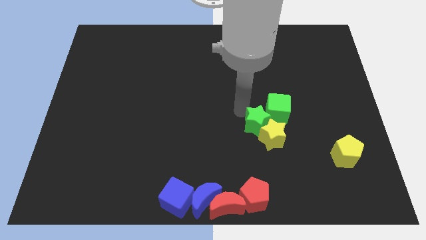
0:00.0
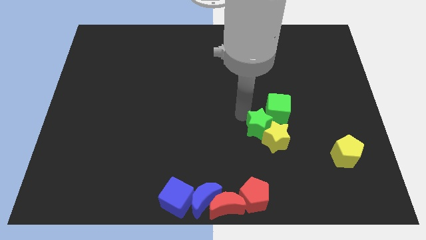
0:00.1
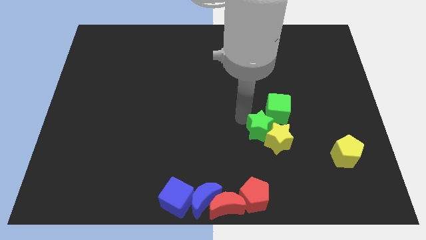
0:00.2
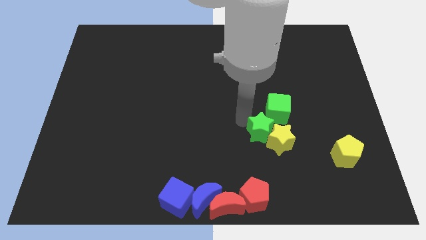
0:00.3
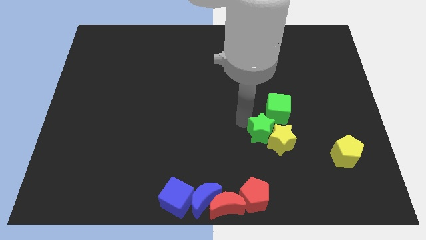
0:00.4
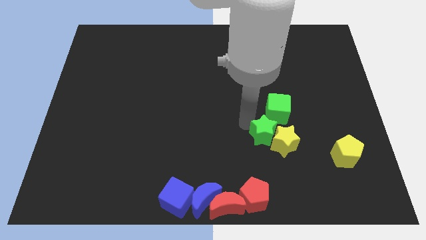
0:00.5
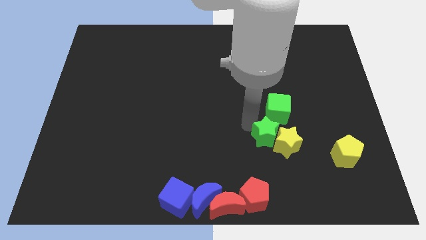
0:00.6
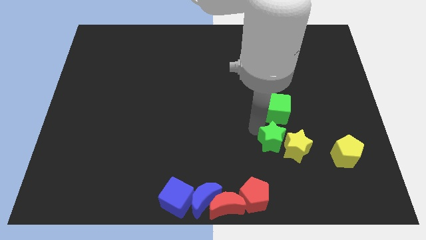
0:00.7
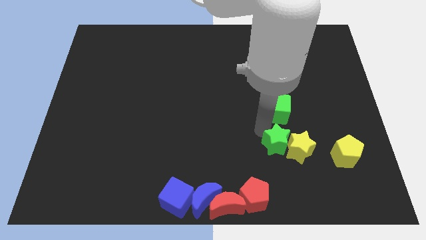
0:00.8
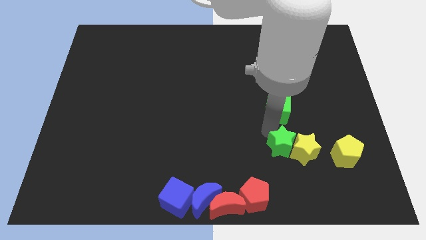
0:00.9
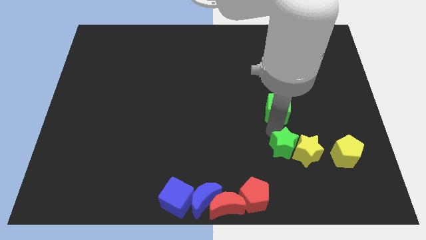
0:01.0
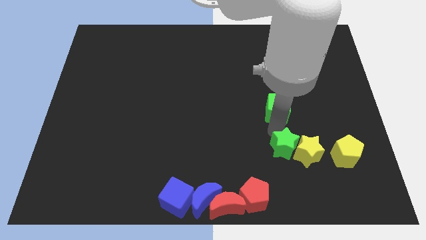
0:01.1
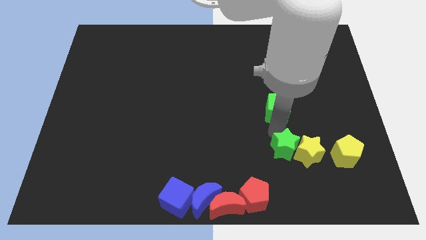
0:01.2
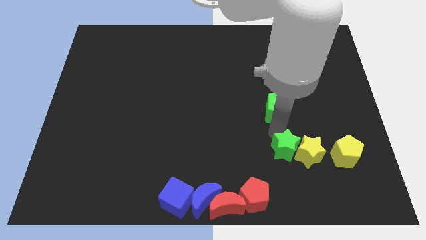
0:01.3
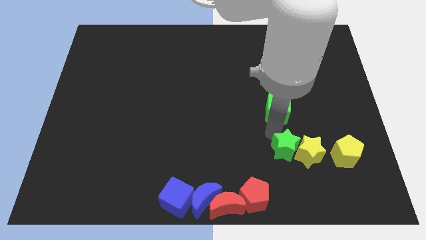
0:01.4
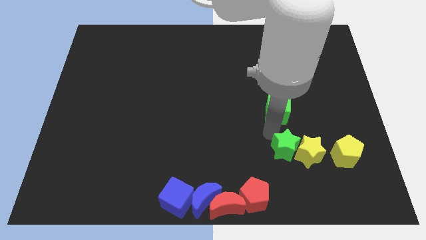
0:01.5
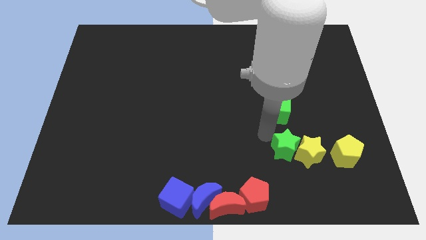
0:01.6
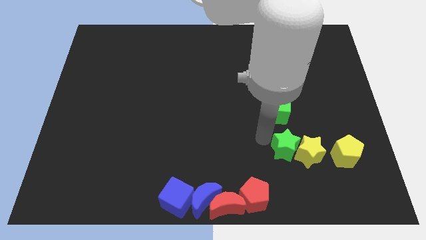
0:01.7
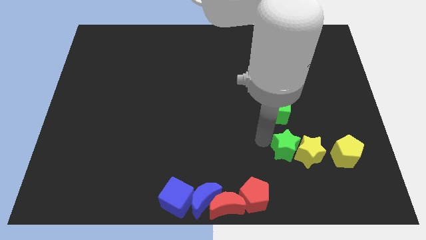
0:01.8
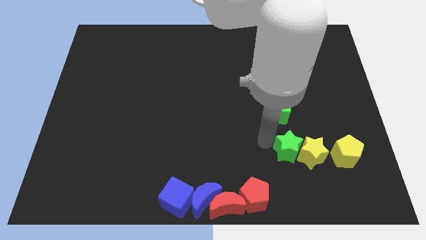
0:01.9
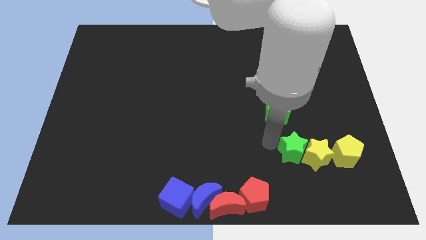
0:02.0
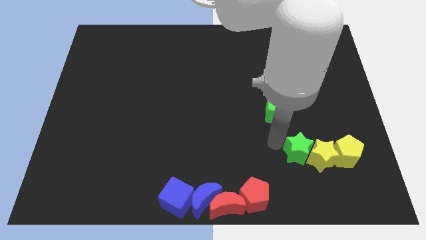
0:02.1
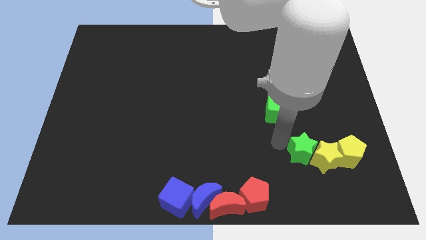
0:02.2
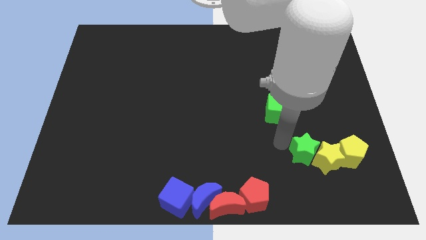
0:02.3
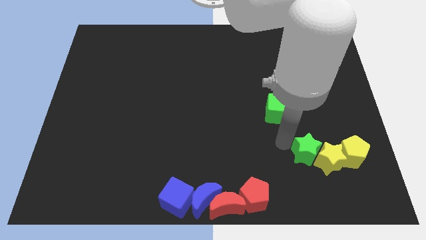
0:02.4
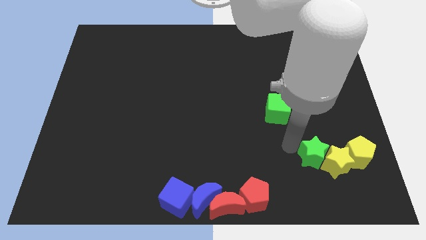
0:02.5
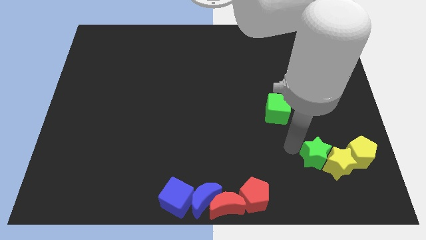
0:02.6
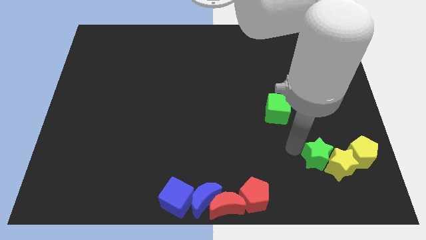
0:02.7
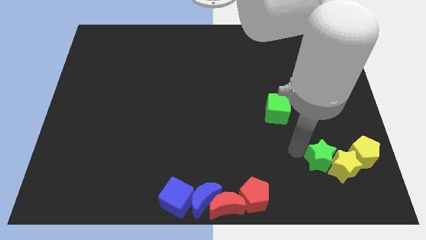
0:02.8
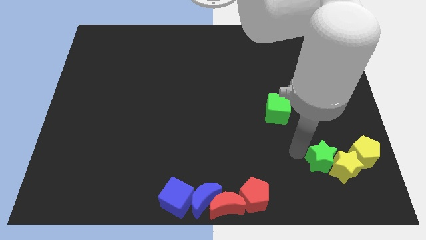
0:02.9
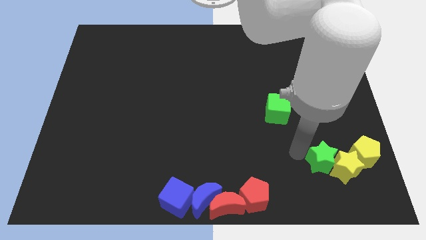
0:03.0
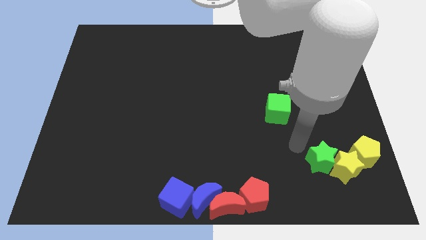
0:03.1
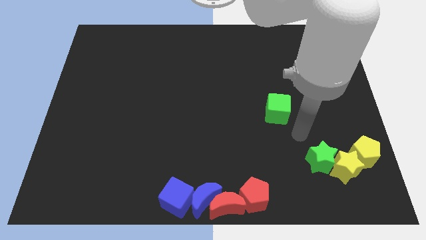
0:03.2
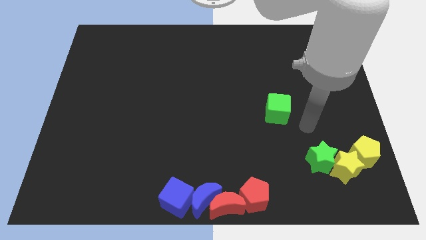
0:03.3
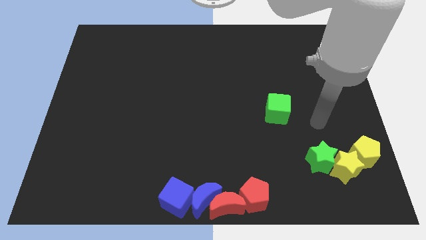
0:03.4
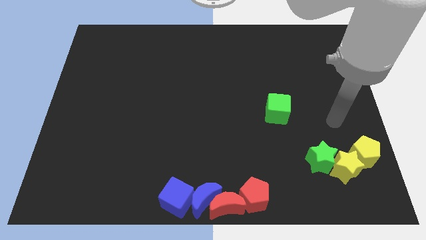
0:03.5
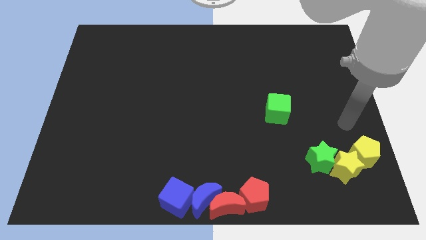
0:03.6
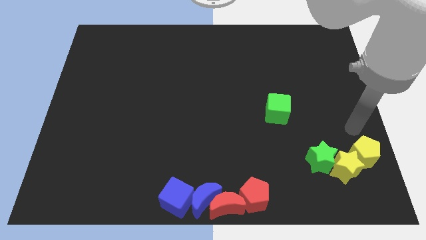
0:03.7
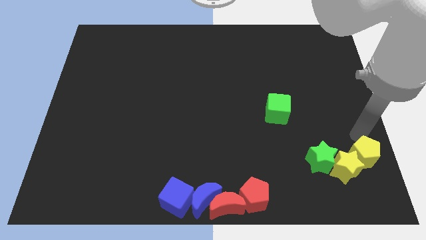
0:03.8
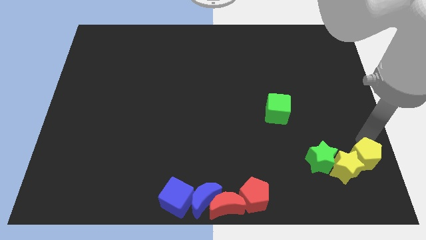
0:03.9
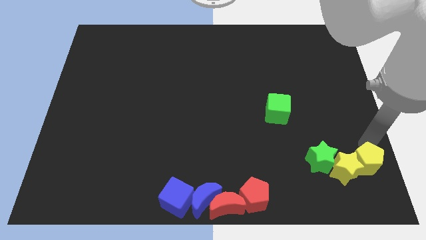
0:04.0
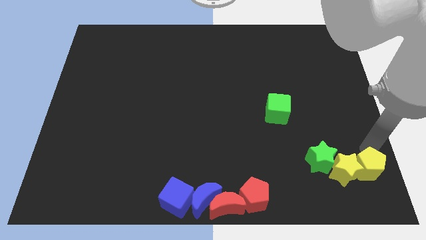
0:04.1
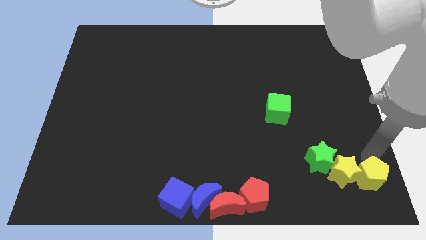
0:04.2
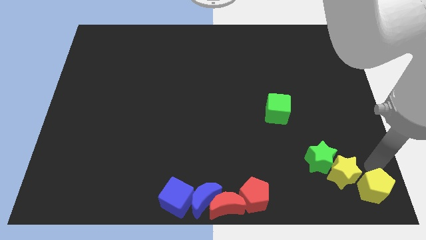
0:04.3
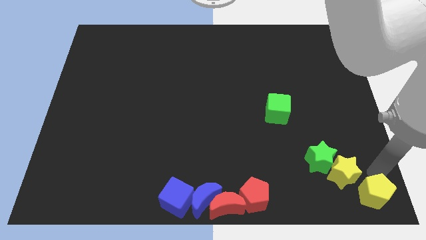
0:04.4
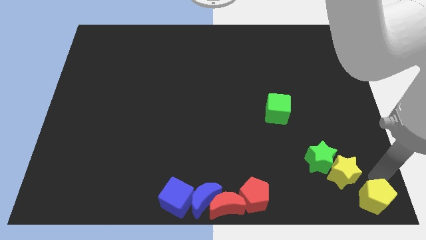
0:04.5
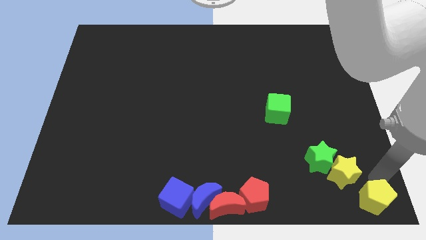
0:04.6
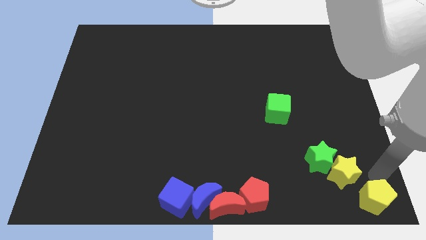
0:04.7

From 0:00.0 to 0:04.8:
move the green star and yellow star towards the bottom right of the board

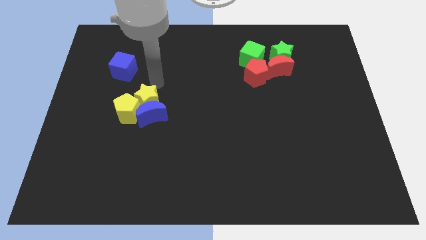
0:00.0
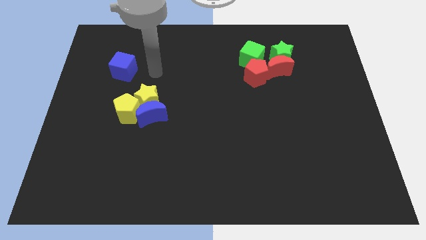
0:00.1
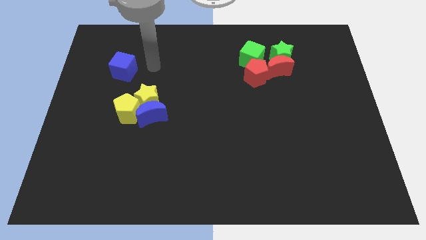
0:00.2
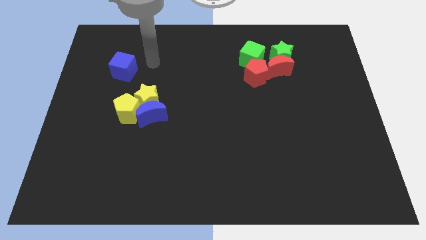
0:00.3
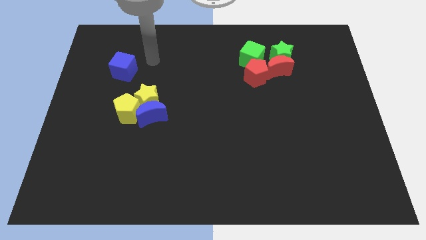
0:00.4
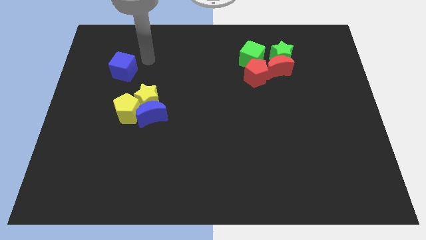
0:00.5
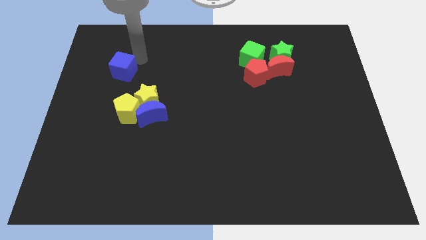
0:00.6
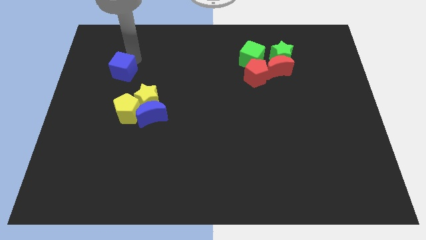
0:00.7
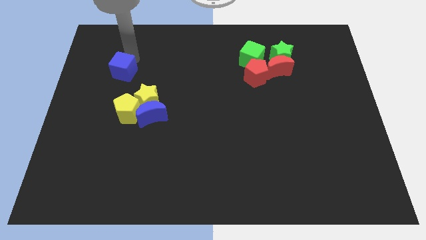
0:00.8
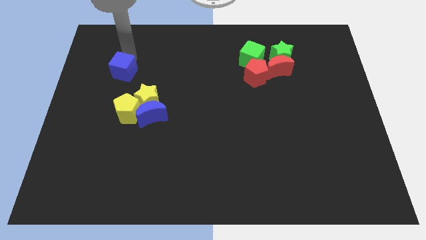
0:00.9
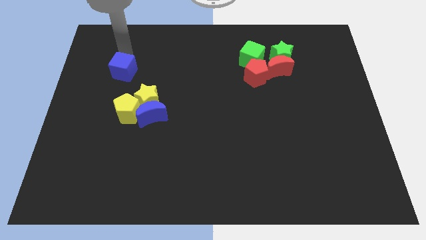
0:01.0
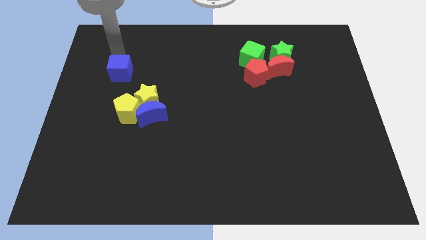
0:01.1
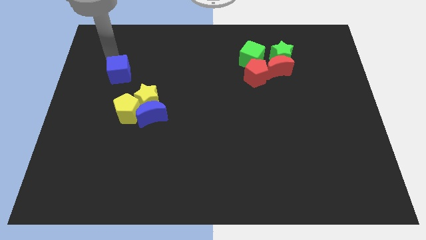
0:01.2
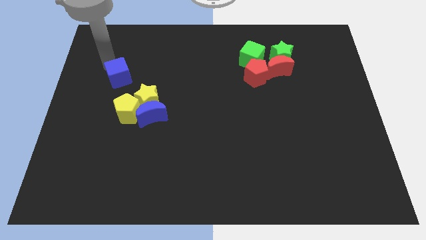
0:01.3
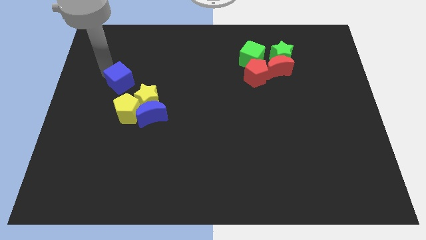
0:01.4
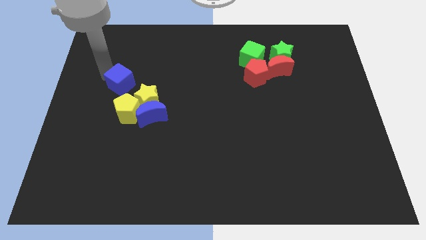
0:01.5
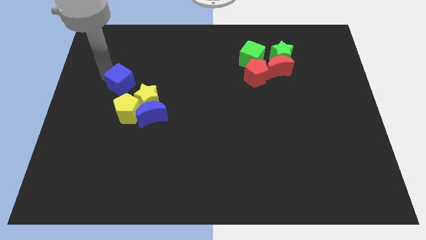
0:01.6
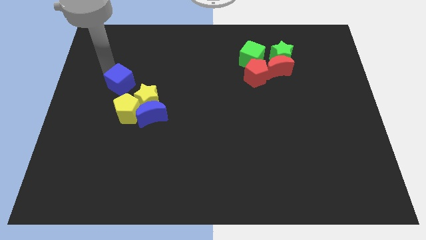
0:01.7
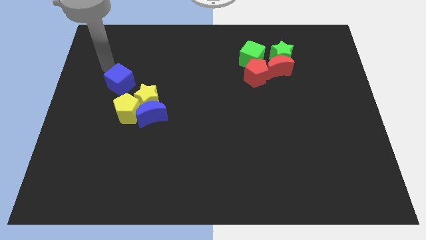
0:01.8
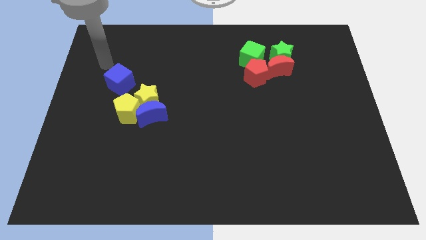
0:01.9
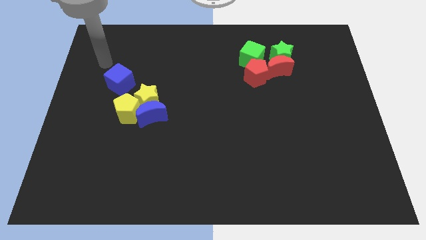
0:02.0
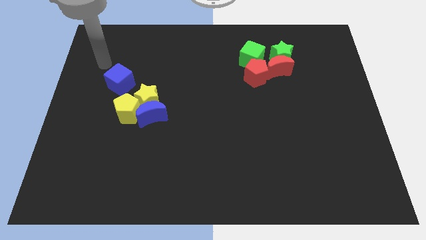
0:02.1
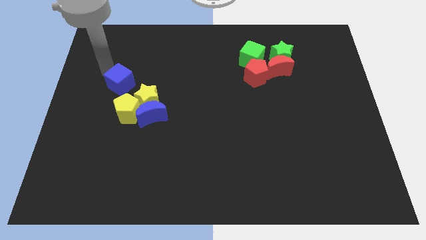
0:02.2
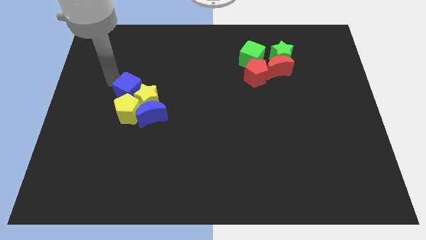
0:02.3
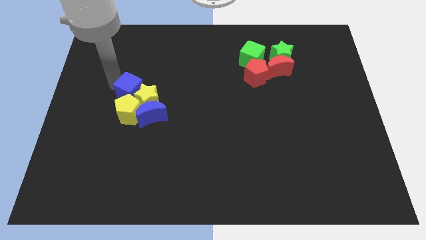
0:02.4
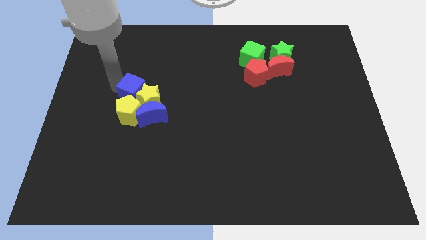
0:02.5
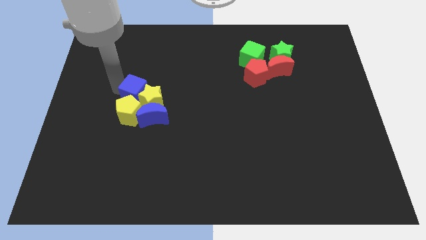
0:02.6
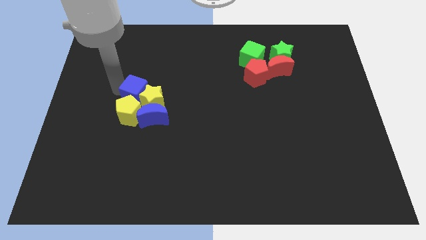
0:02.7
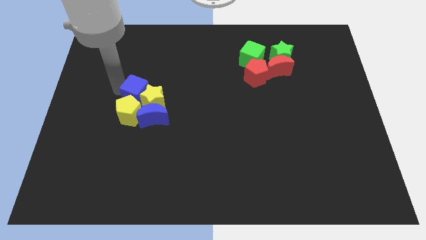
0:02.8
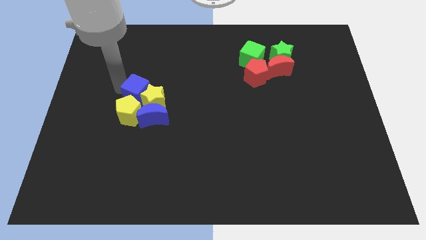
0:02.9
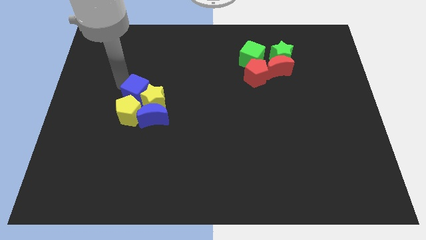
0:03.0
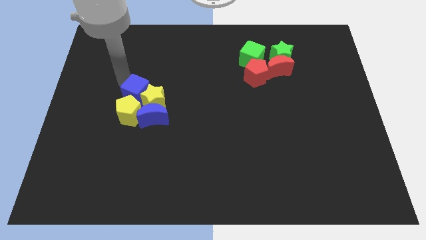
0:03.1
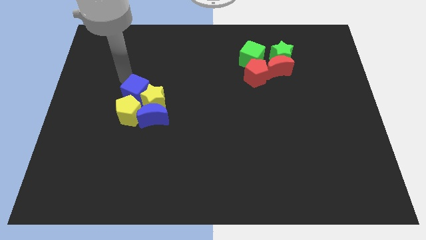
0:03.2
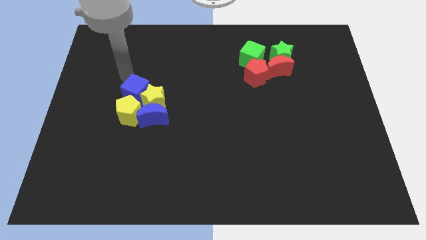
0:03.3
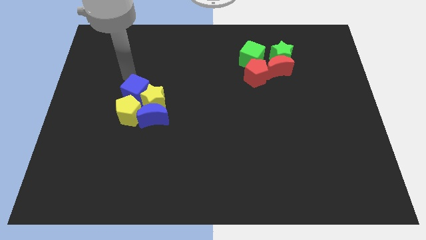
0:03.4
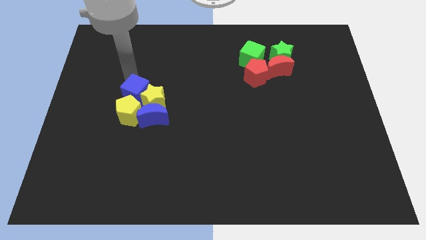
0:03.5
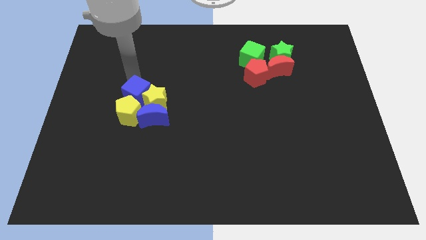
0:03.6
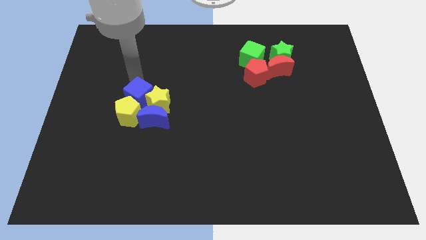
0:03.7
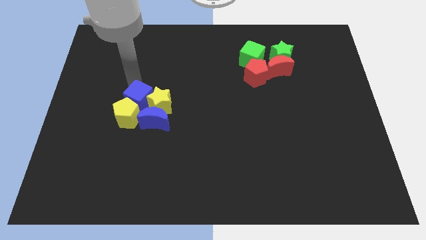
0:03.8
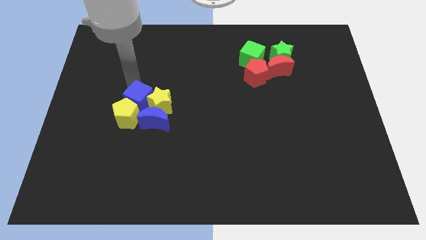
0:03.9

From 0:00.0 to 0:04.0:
push the blue cube to the yellow star

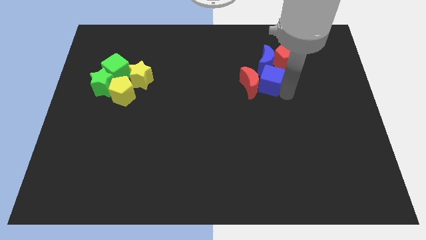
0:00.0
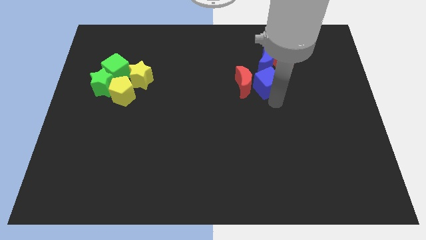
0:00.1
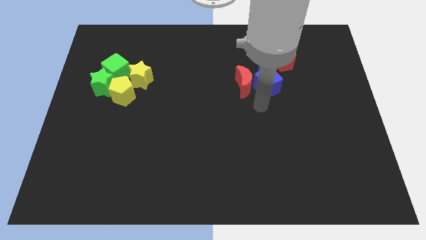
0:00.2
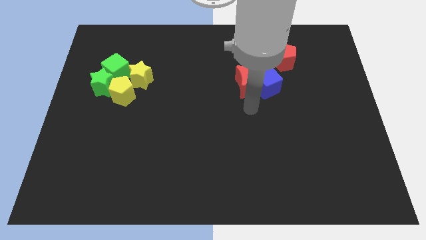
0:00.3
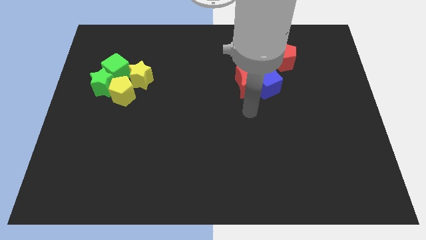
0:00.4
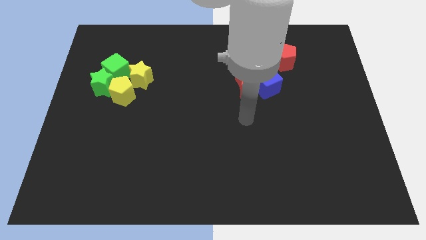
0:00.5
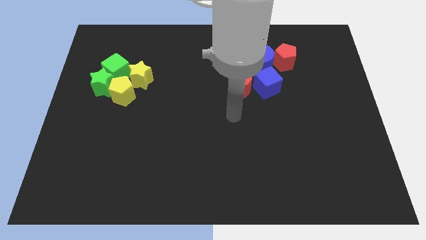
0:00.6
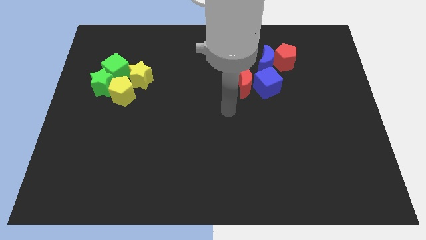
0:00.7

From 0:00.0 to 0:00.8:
slightly push blue cube along with red crescent below to the blue crescent
